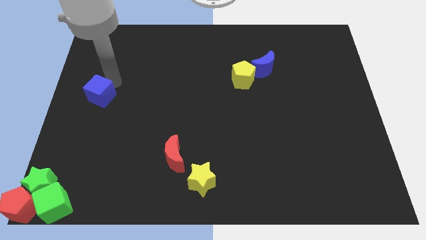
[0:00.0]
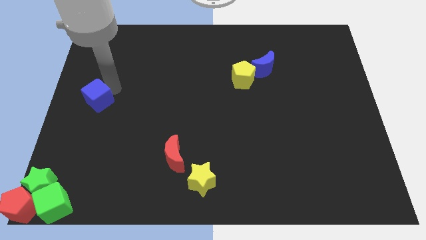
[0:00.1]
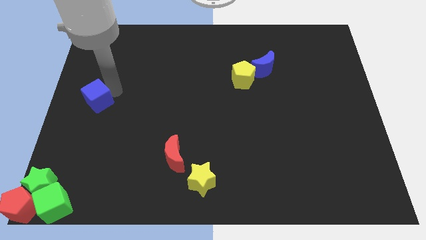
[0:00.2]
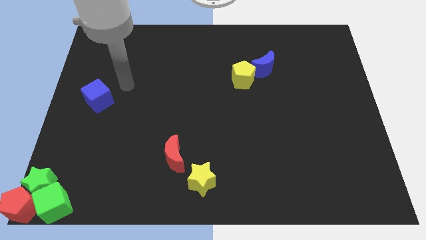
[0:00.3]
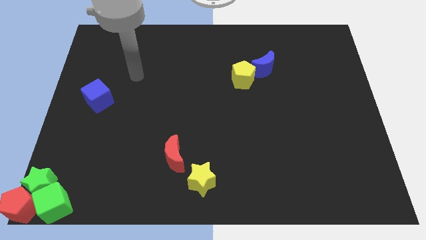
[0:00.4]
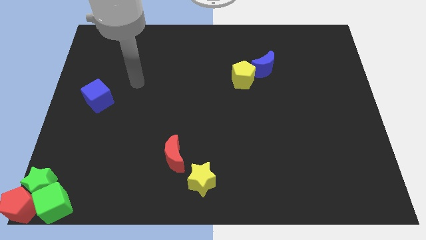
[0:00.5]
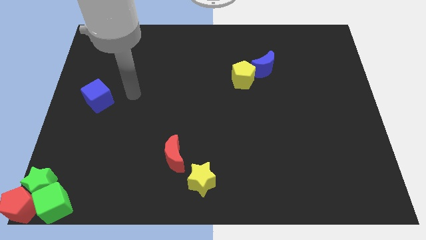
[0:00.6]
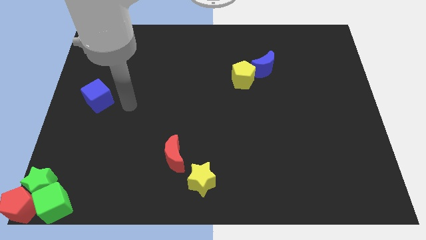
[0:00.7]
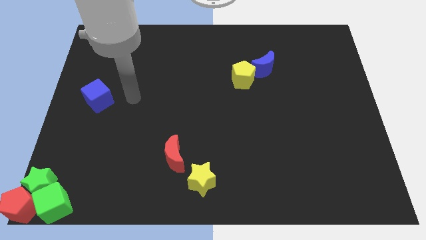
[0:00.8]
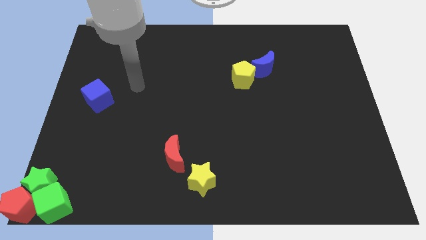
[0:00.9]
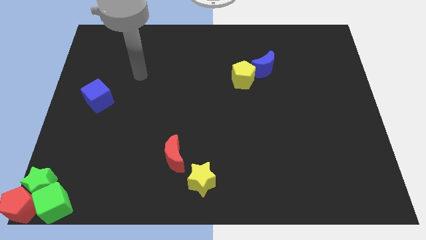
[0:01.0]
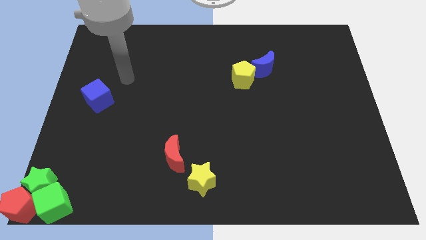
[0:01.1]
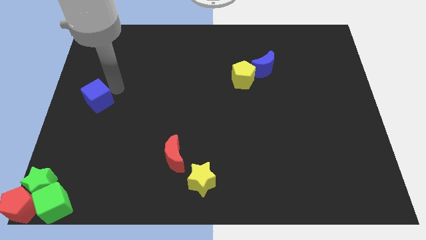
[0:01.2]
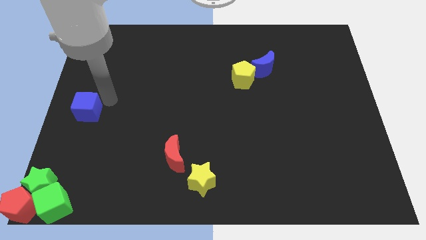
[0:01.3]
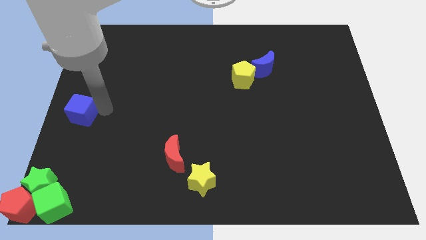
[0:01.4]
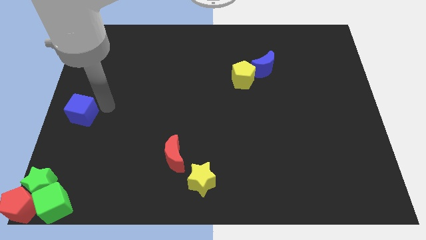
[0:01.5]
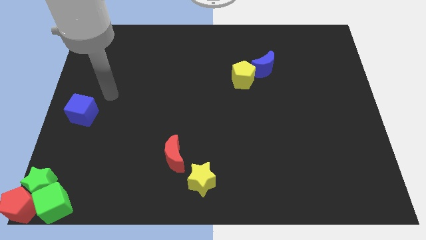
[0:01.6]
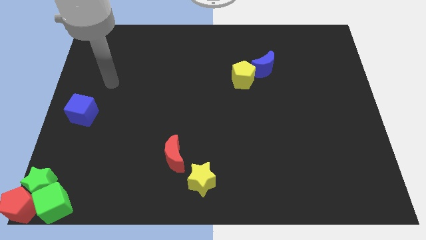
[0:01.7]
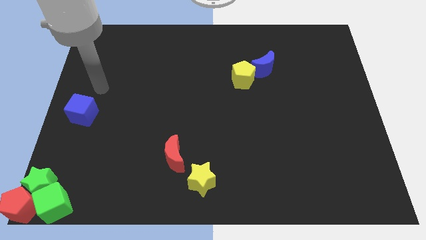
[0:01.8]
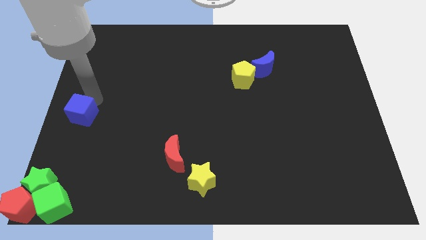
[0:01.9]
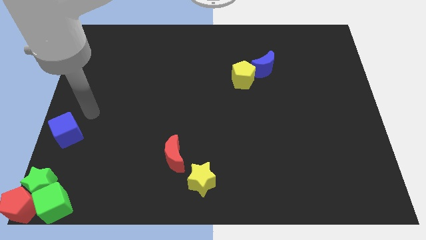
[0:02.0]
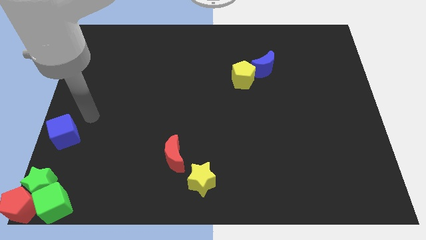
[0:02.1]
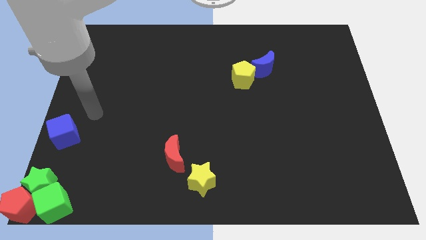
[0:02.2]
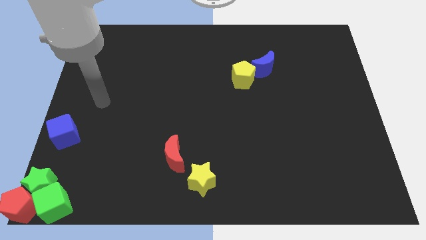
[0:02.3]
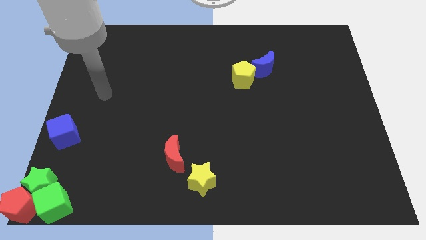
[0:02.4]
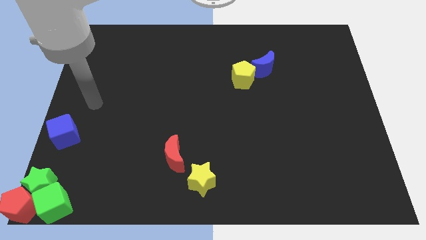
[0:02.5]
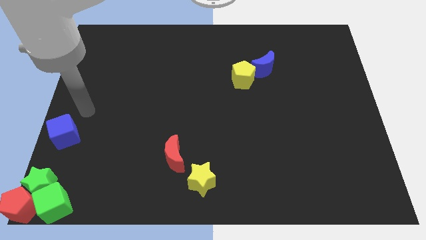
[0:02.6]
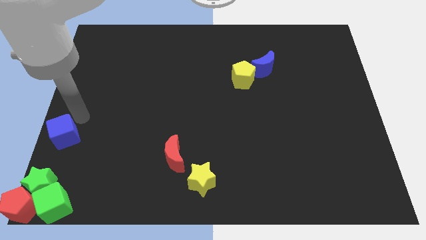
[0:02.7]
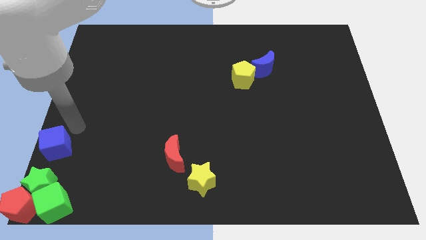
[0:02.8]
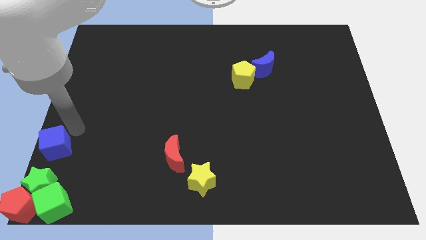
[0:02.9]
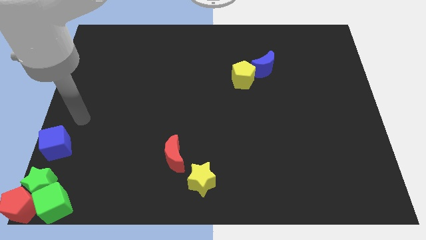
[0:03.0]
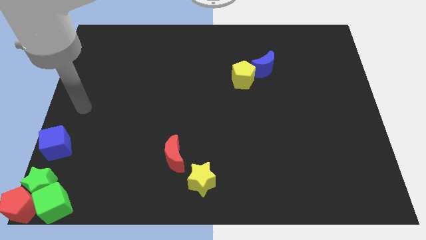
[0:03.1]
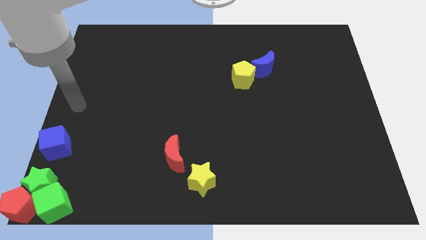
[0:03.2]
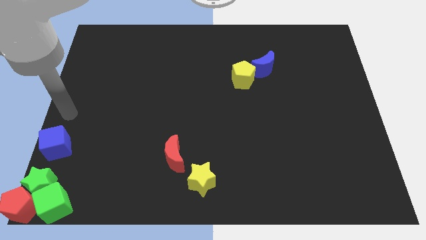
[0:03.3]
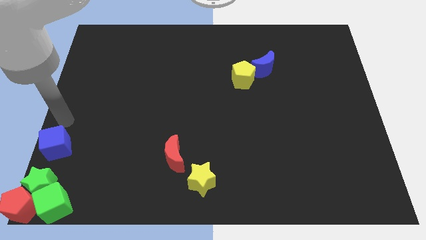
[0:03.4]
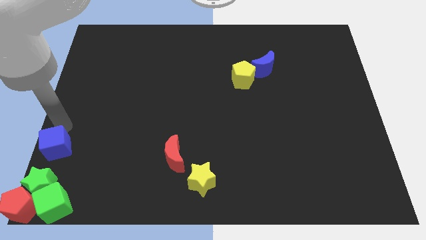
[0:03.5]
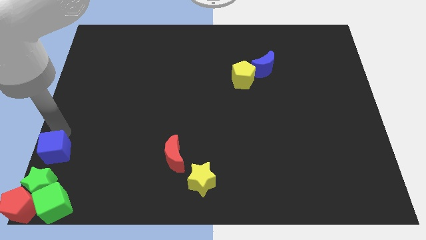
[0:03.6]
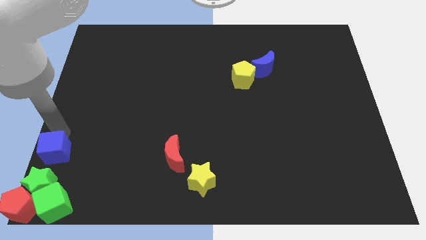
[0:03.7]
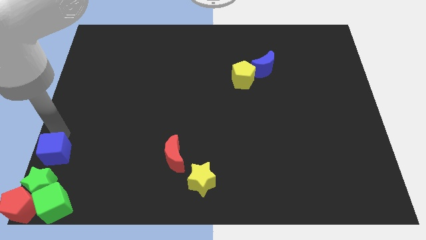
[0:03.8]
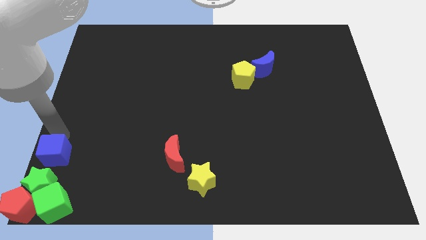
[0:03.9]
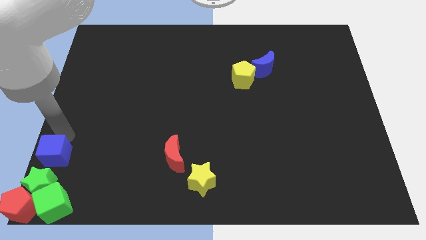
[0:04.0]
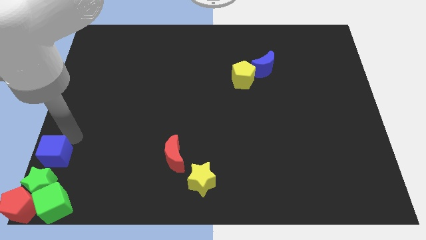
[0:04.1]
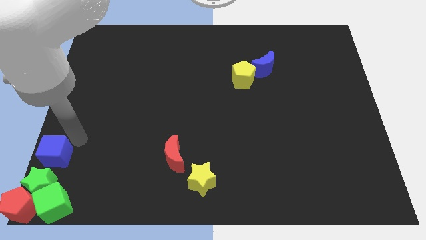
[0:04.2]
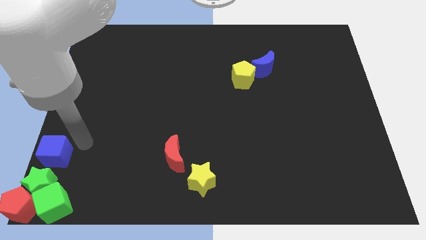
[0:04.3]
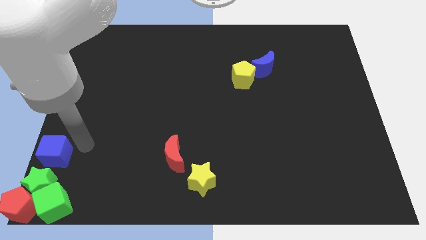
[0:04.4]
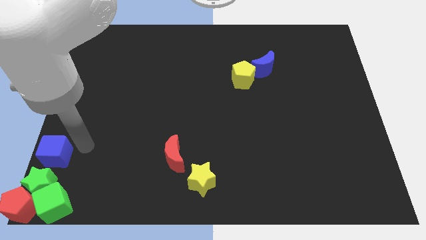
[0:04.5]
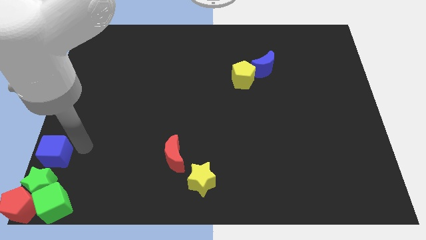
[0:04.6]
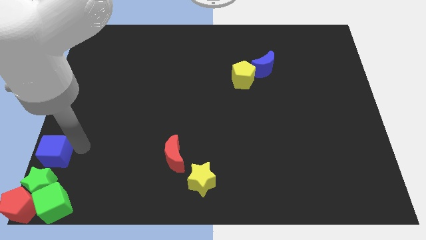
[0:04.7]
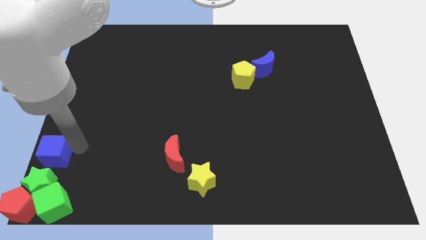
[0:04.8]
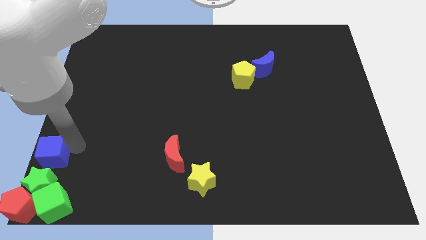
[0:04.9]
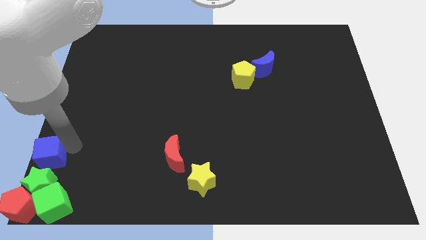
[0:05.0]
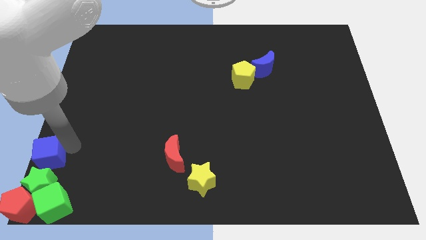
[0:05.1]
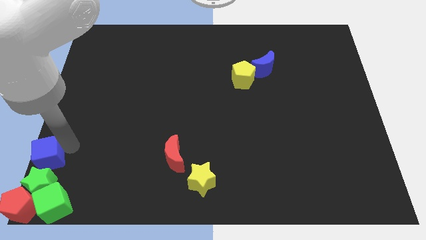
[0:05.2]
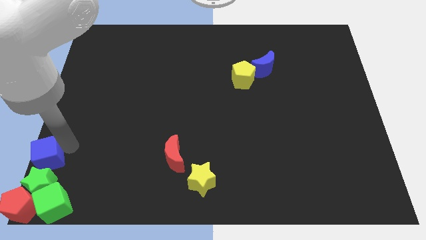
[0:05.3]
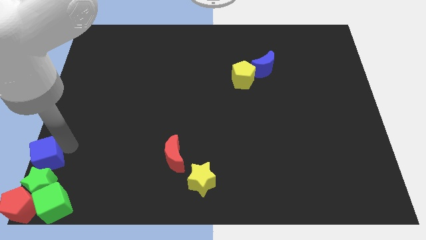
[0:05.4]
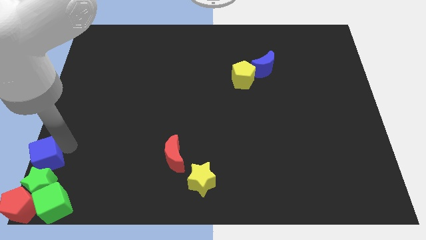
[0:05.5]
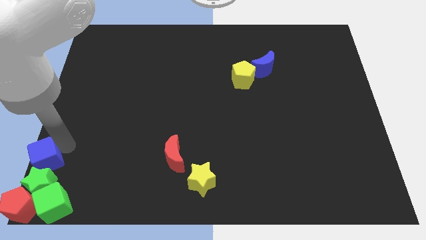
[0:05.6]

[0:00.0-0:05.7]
move the blue cube to the bottom left corner of the board

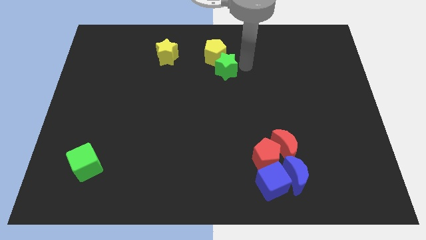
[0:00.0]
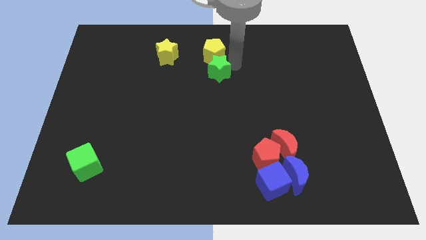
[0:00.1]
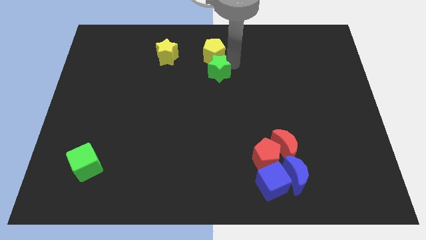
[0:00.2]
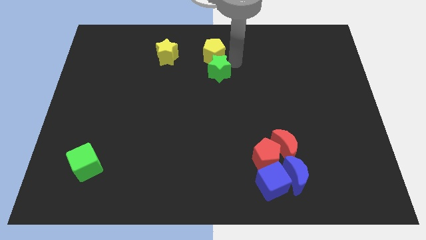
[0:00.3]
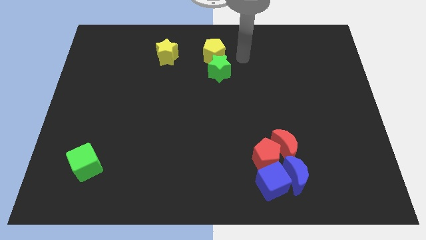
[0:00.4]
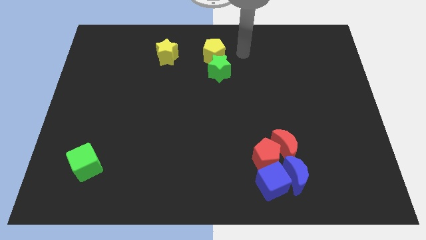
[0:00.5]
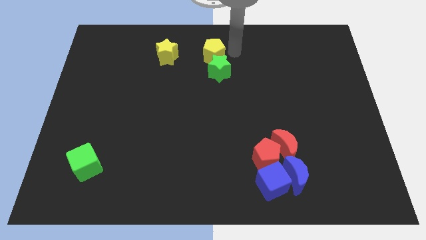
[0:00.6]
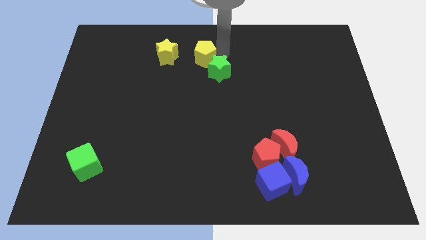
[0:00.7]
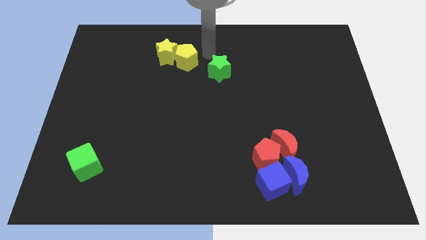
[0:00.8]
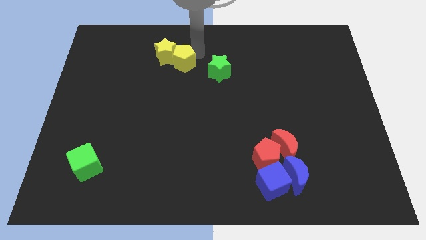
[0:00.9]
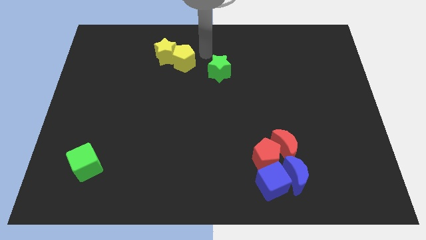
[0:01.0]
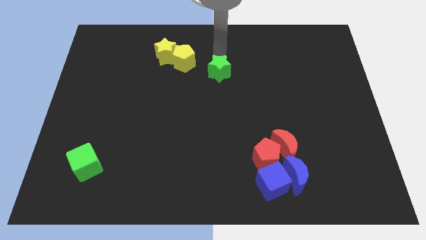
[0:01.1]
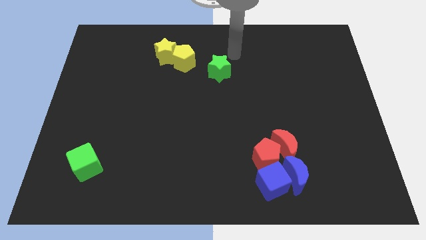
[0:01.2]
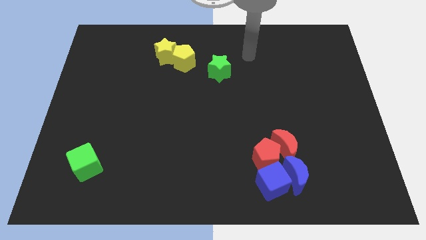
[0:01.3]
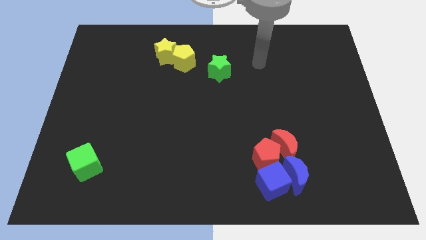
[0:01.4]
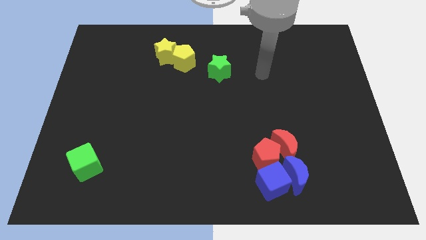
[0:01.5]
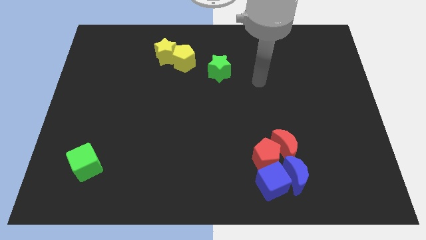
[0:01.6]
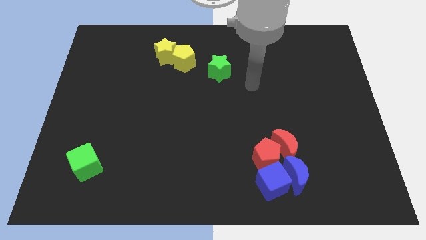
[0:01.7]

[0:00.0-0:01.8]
push the yellow pentagon into yellow star

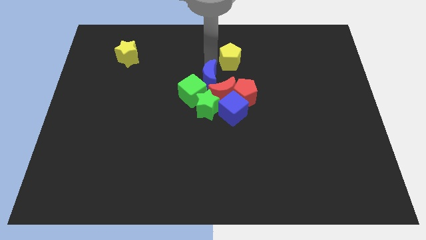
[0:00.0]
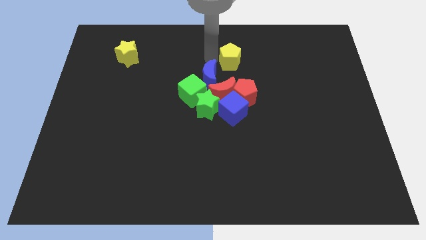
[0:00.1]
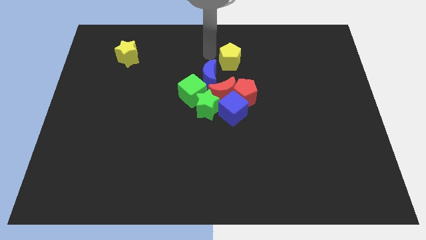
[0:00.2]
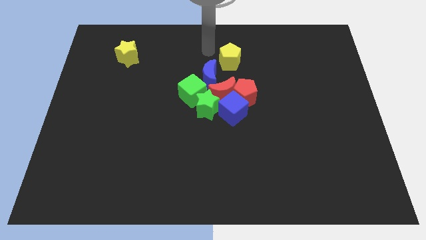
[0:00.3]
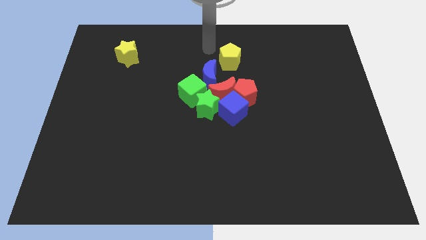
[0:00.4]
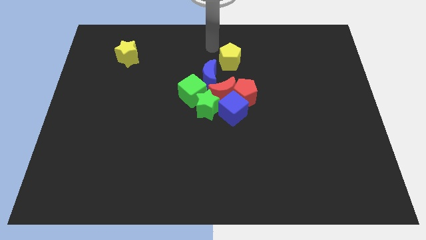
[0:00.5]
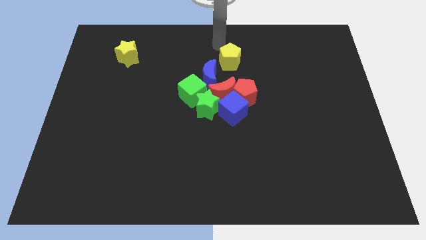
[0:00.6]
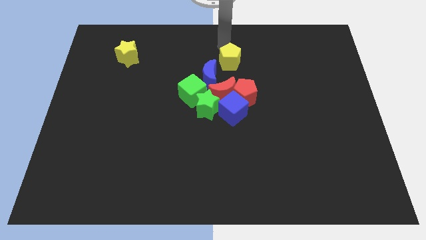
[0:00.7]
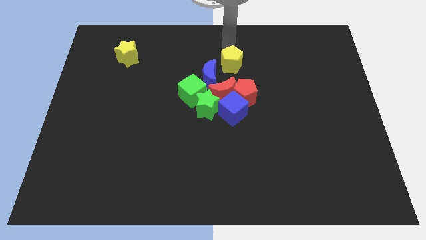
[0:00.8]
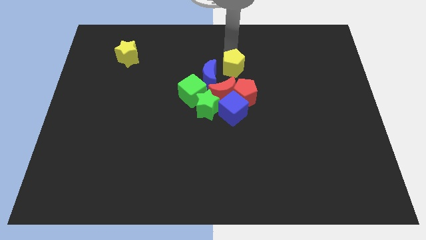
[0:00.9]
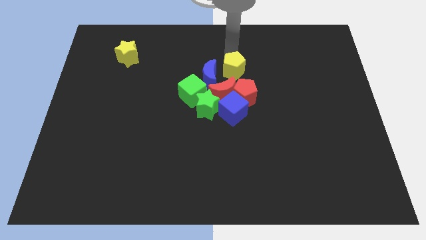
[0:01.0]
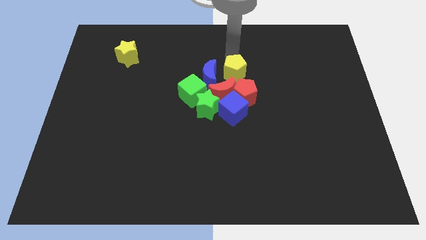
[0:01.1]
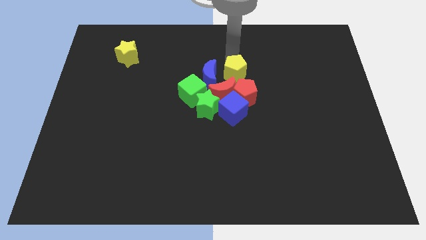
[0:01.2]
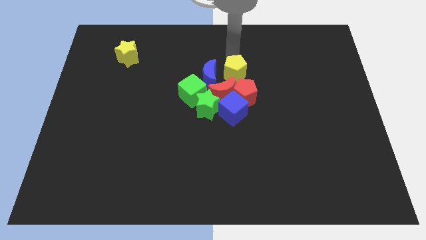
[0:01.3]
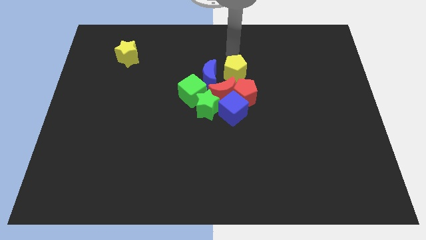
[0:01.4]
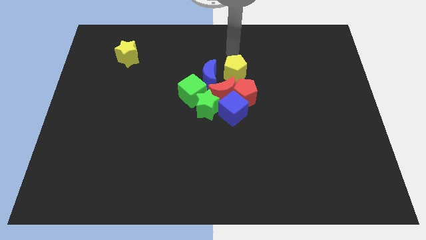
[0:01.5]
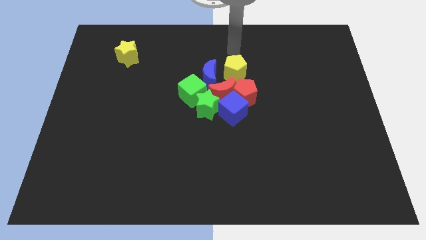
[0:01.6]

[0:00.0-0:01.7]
move the yellow pentagon into the group of blocks
